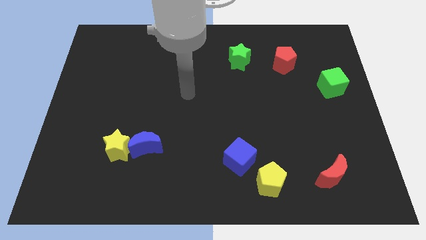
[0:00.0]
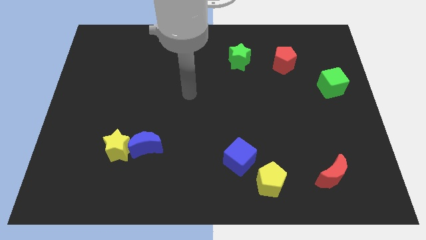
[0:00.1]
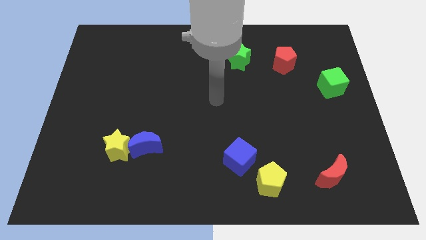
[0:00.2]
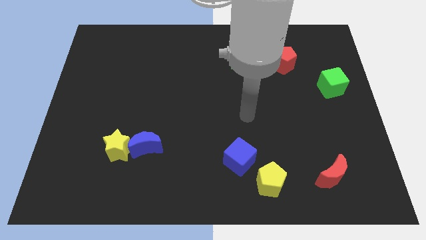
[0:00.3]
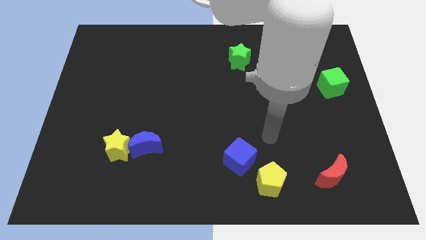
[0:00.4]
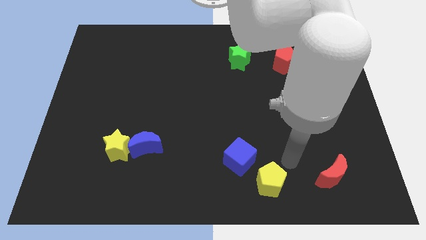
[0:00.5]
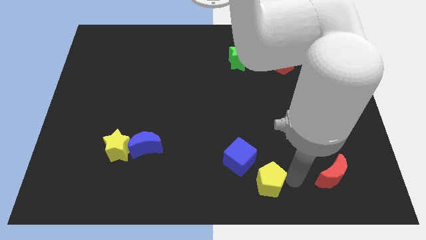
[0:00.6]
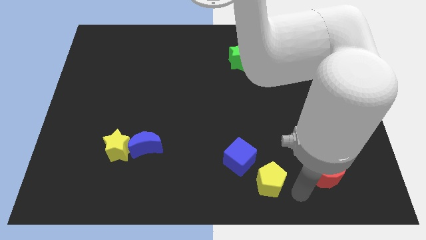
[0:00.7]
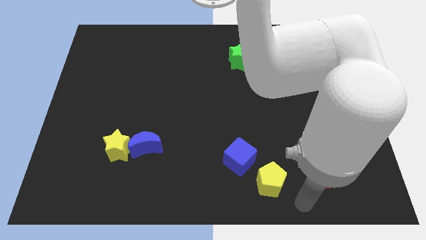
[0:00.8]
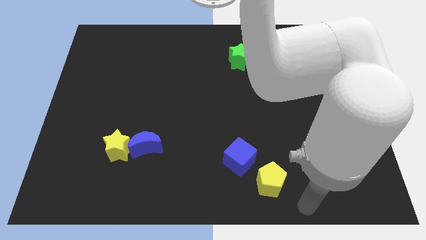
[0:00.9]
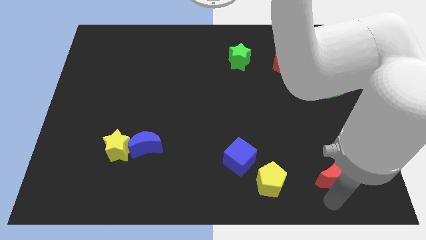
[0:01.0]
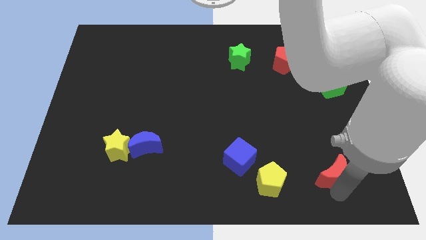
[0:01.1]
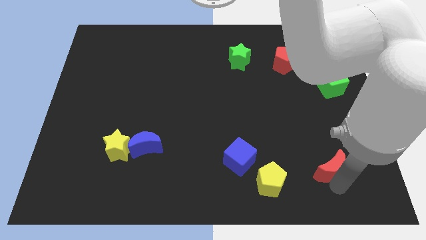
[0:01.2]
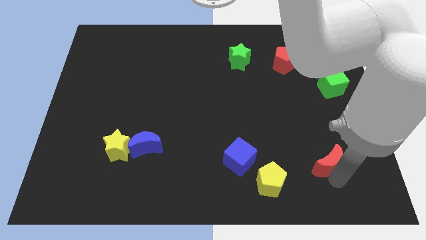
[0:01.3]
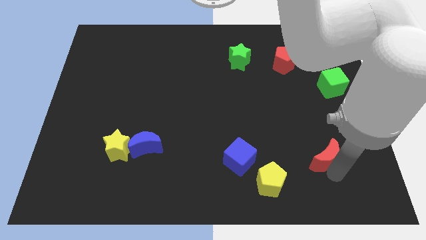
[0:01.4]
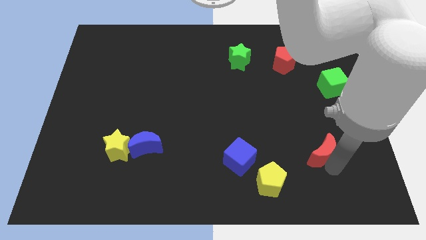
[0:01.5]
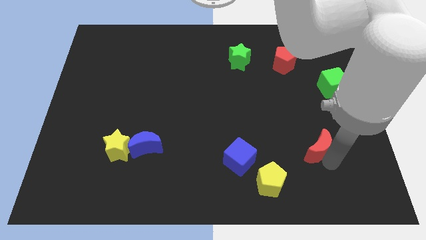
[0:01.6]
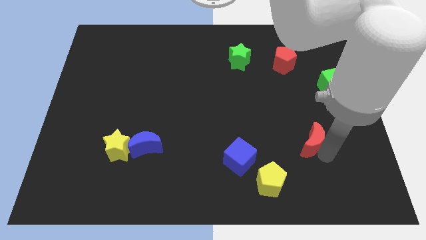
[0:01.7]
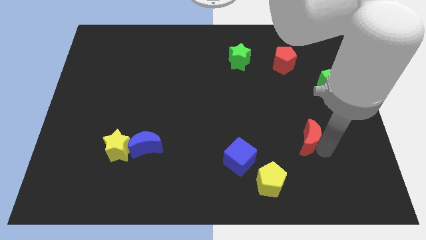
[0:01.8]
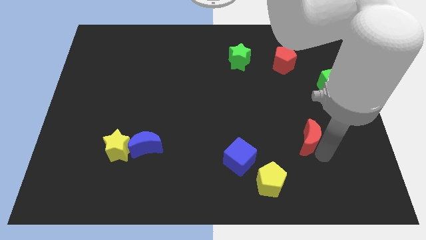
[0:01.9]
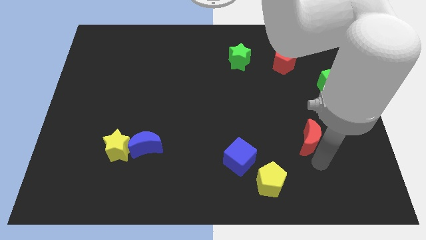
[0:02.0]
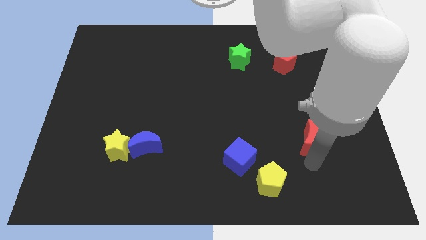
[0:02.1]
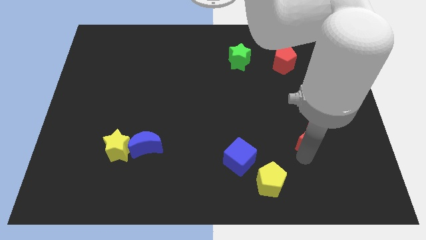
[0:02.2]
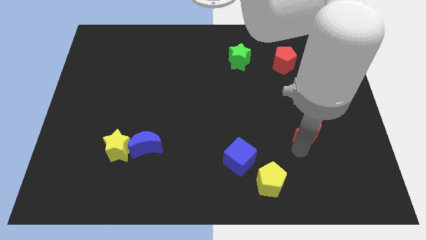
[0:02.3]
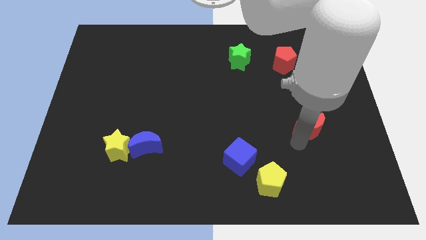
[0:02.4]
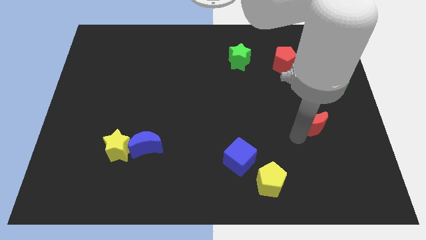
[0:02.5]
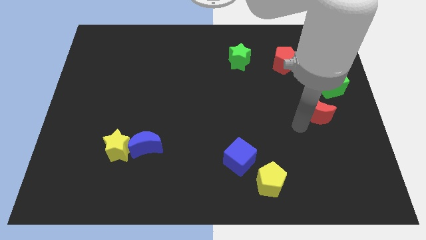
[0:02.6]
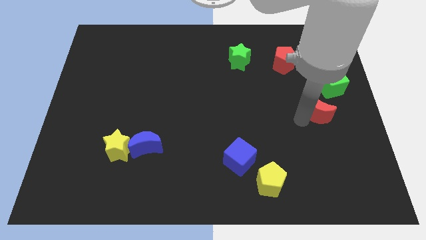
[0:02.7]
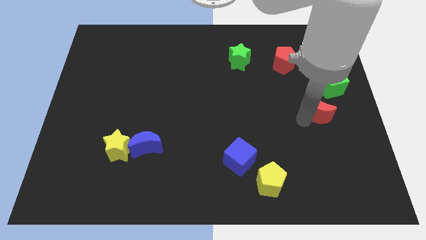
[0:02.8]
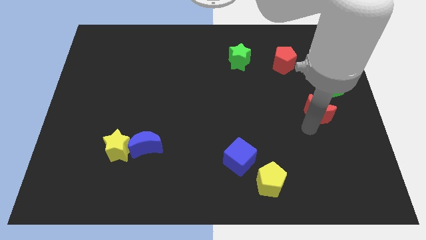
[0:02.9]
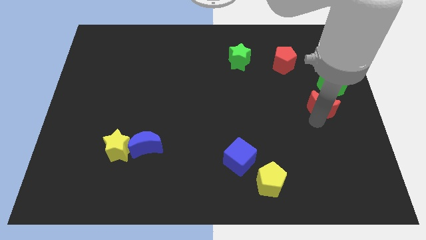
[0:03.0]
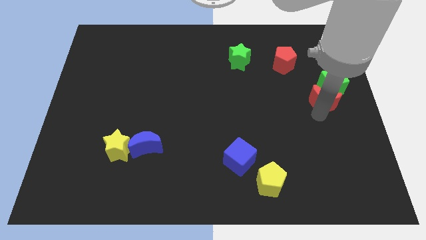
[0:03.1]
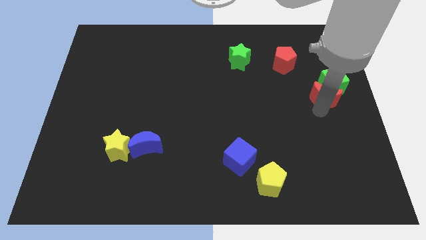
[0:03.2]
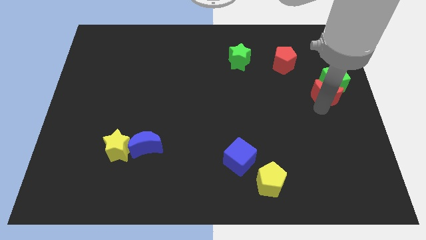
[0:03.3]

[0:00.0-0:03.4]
push the red moon towards the green cube

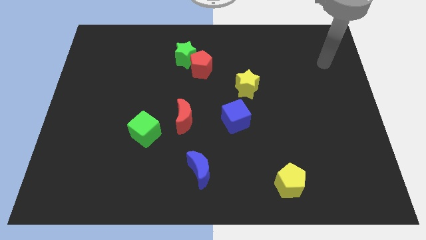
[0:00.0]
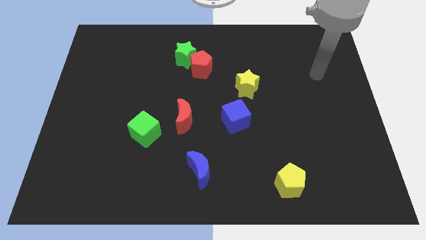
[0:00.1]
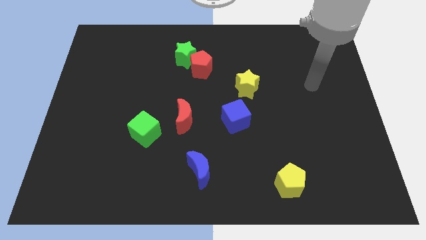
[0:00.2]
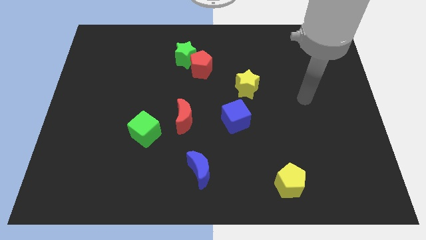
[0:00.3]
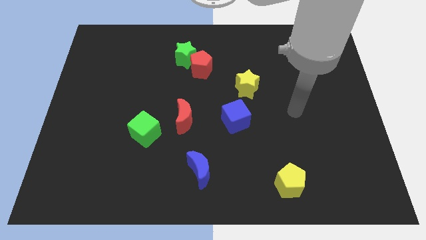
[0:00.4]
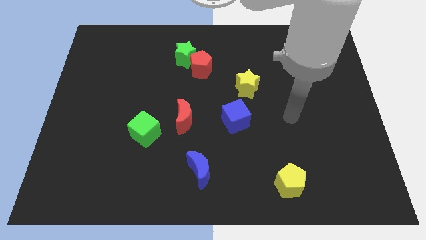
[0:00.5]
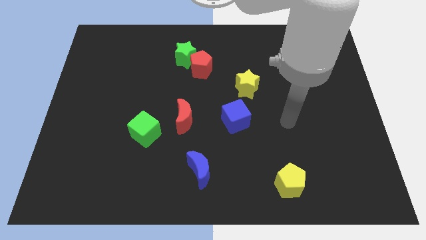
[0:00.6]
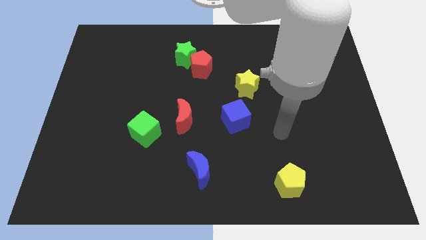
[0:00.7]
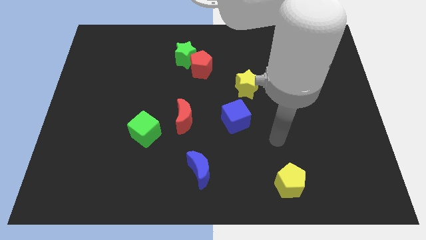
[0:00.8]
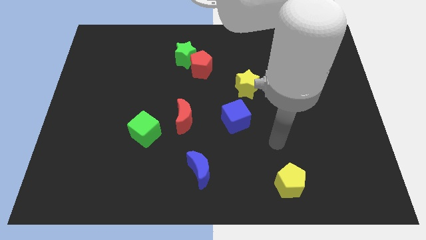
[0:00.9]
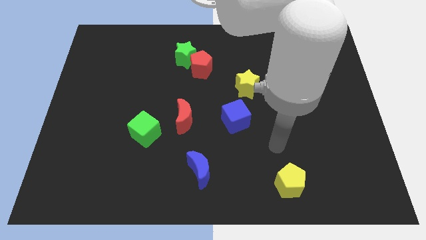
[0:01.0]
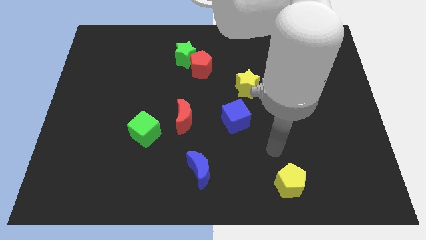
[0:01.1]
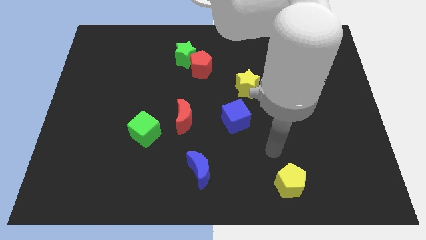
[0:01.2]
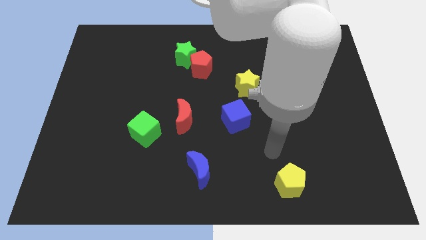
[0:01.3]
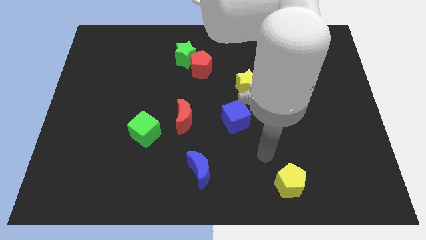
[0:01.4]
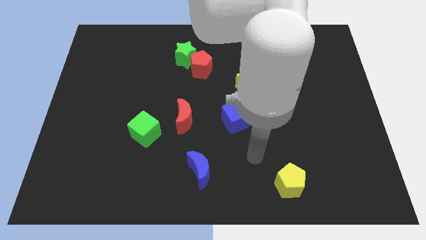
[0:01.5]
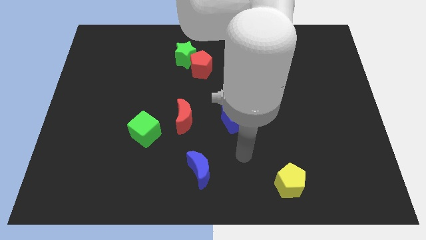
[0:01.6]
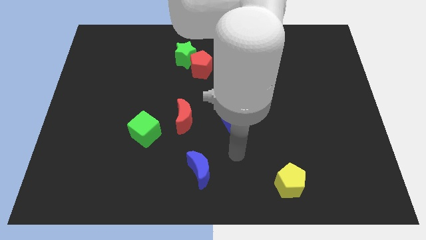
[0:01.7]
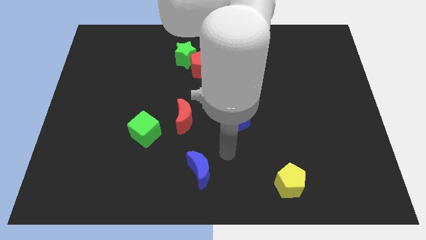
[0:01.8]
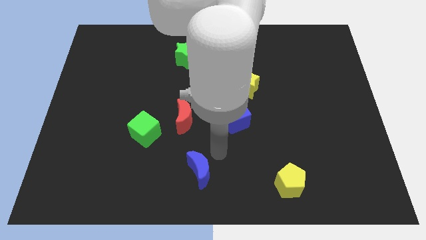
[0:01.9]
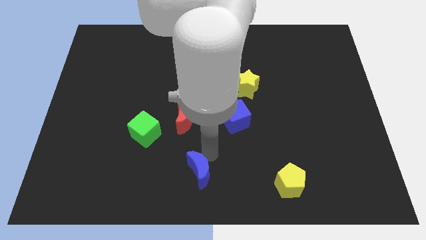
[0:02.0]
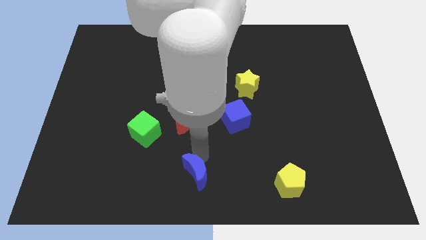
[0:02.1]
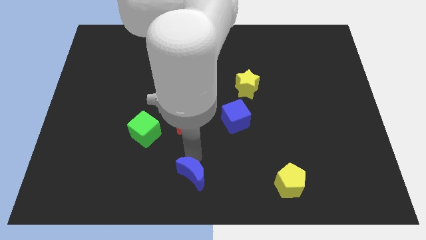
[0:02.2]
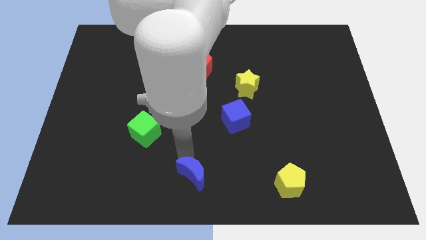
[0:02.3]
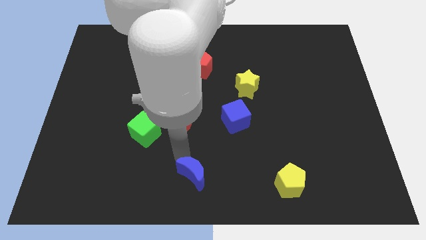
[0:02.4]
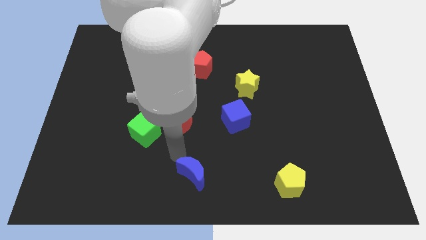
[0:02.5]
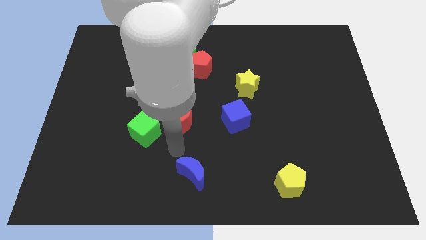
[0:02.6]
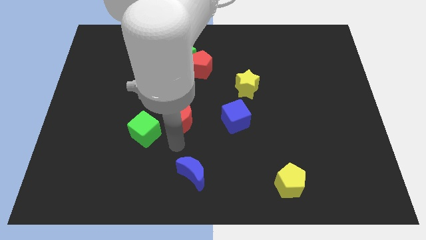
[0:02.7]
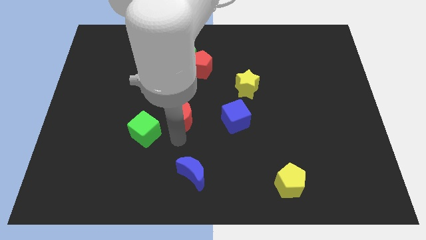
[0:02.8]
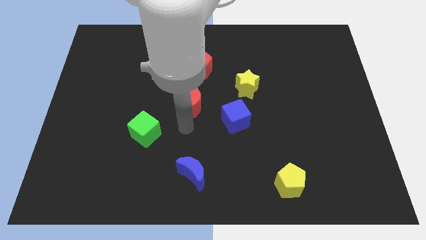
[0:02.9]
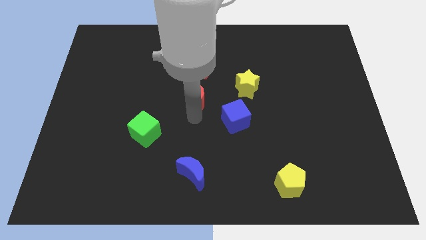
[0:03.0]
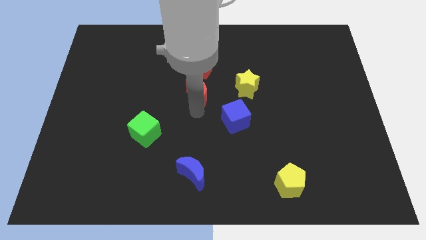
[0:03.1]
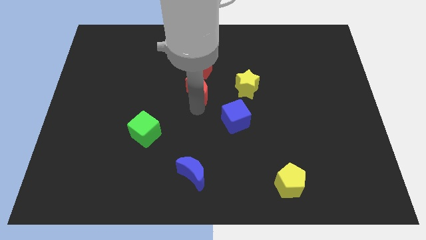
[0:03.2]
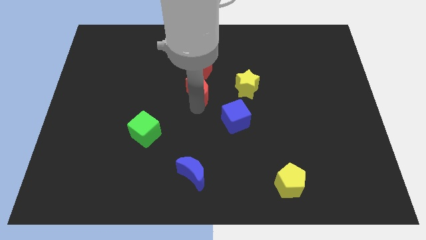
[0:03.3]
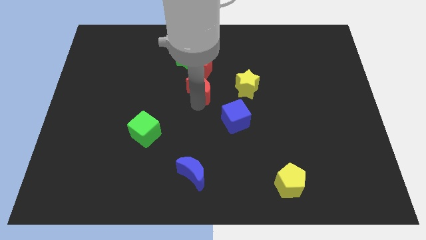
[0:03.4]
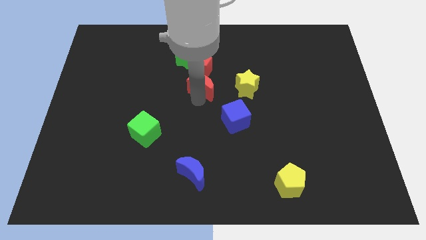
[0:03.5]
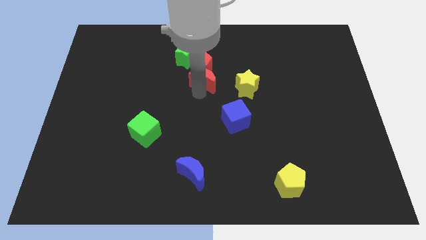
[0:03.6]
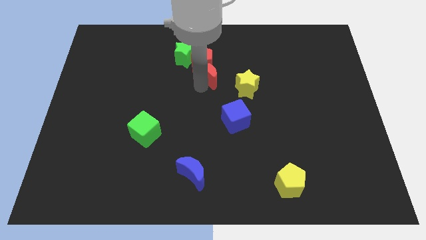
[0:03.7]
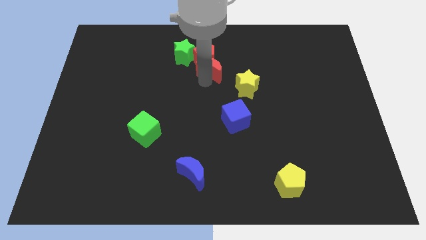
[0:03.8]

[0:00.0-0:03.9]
slide the red moon towards the red pentagon

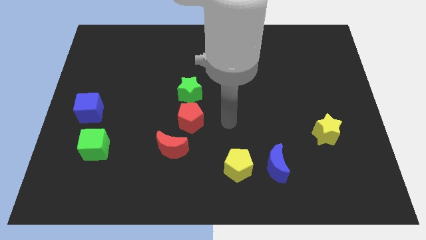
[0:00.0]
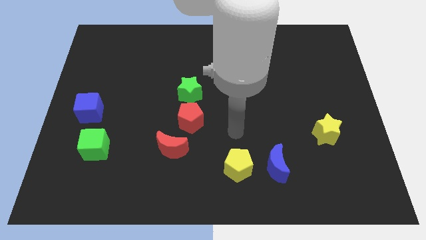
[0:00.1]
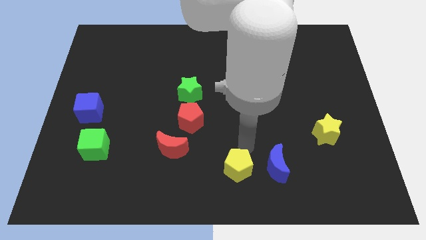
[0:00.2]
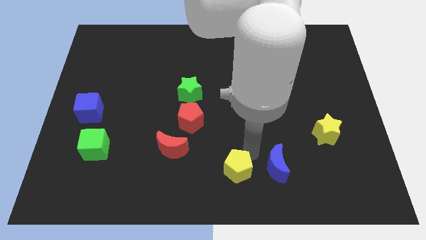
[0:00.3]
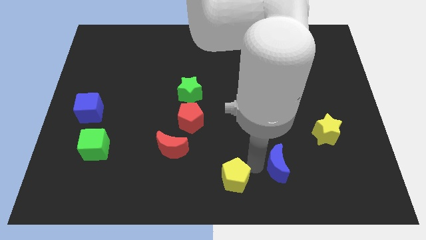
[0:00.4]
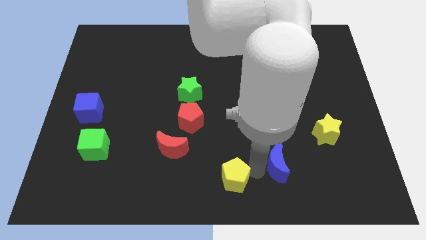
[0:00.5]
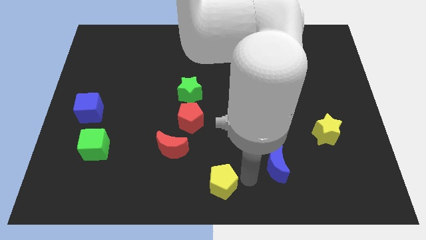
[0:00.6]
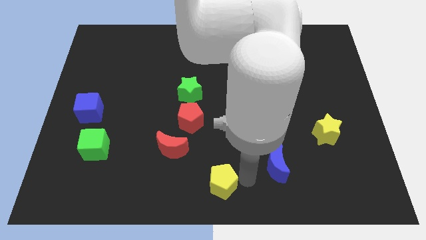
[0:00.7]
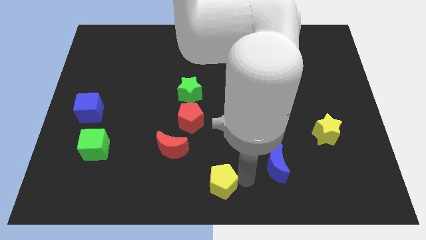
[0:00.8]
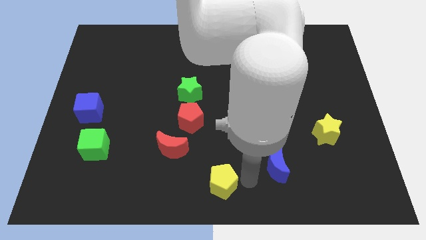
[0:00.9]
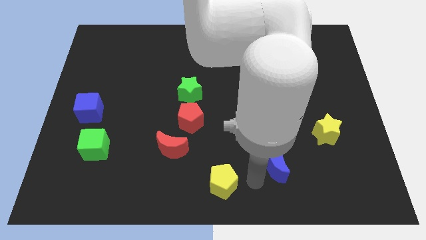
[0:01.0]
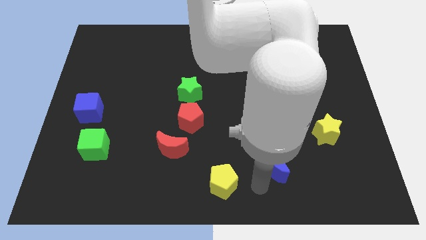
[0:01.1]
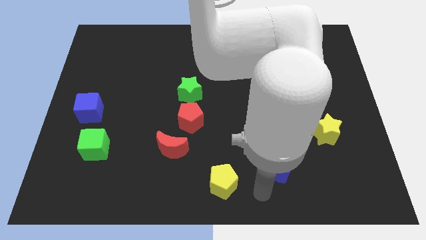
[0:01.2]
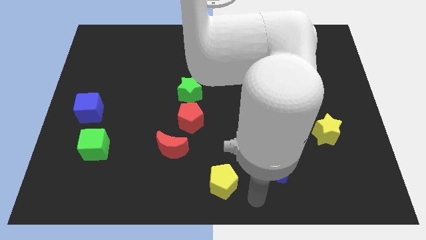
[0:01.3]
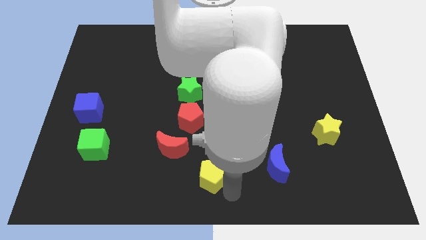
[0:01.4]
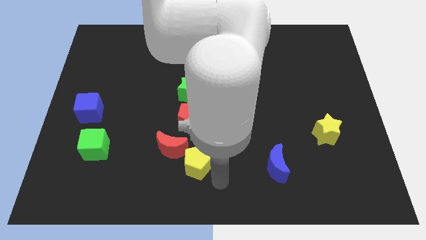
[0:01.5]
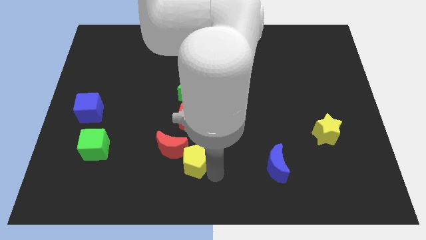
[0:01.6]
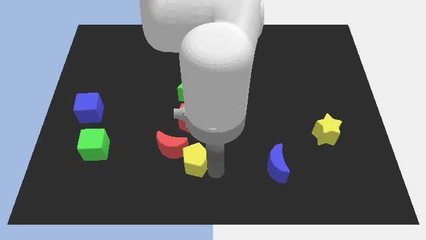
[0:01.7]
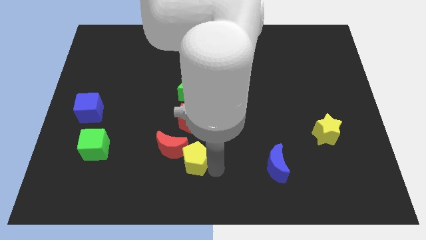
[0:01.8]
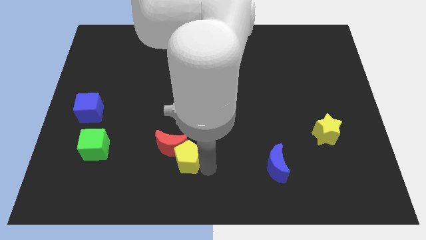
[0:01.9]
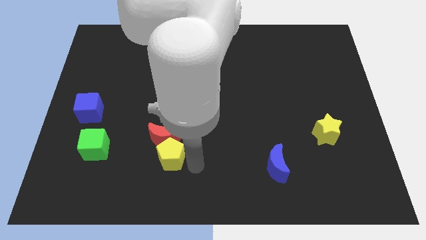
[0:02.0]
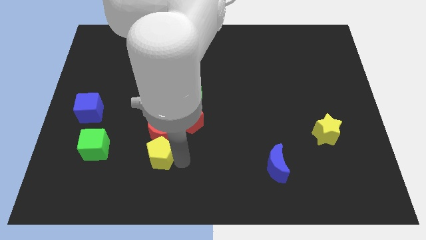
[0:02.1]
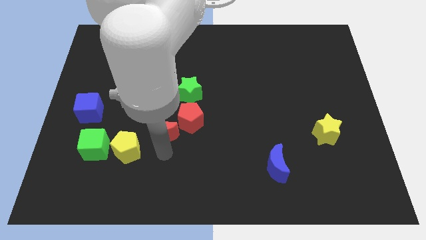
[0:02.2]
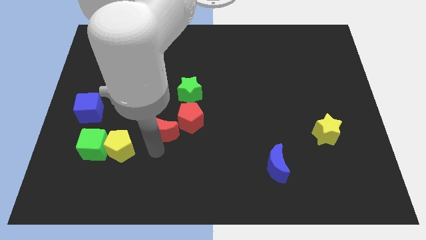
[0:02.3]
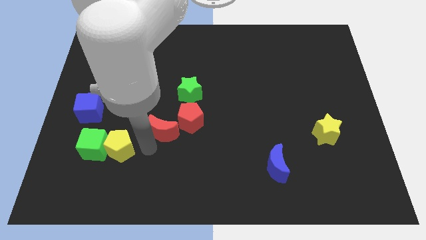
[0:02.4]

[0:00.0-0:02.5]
push the yellow pentagon close to the green cube
